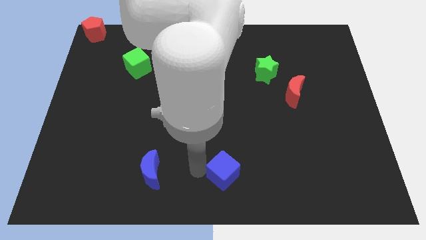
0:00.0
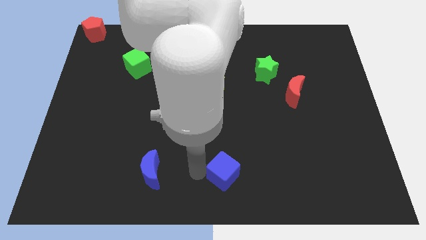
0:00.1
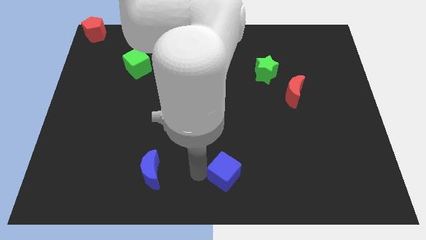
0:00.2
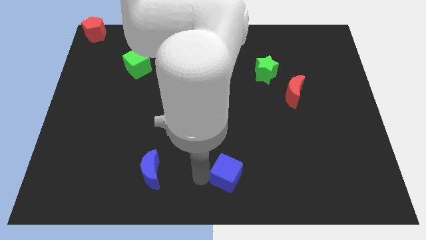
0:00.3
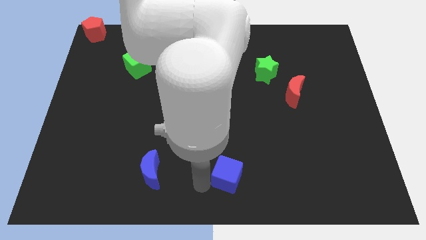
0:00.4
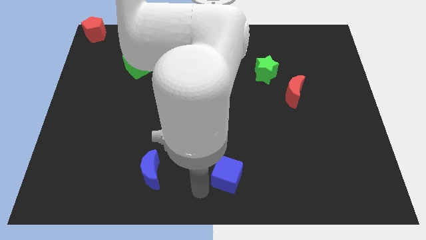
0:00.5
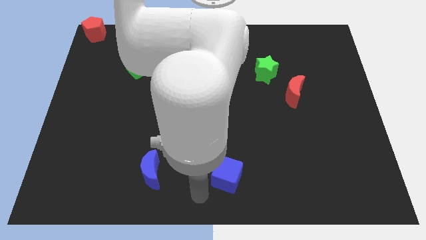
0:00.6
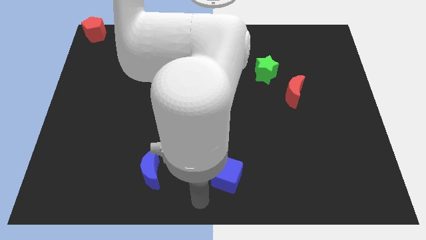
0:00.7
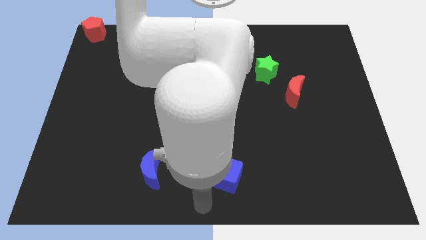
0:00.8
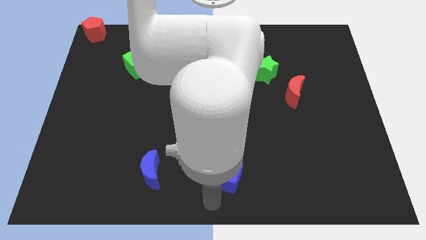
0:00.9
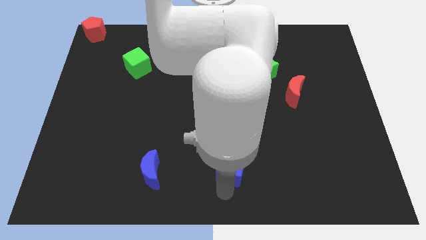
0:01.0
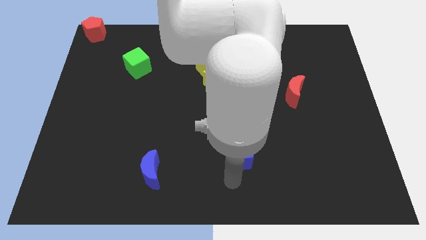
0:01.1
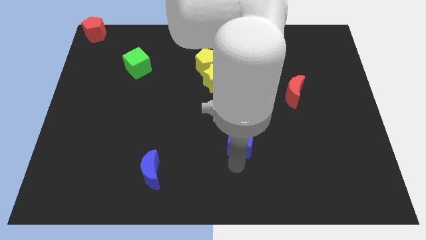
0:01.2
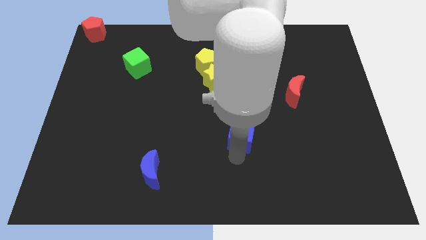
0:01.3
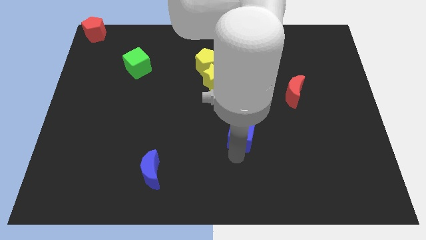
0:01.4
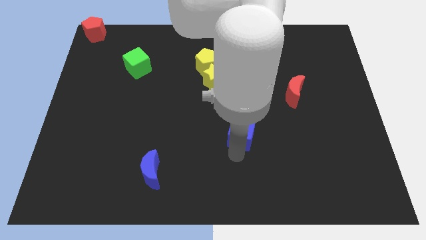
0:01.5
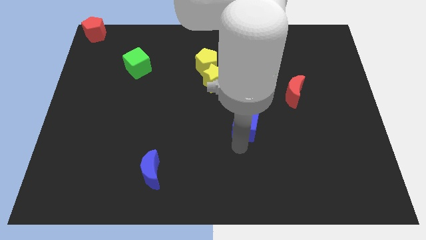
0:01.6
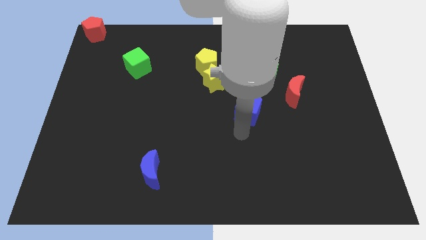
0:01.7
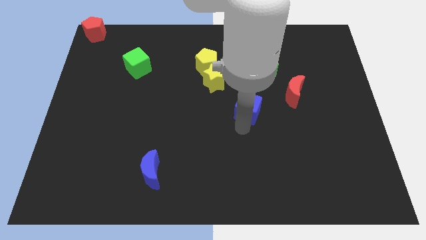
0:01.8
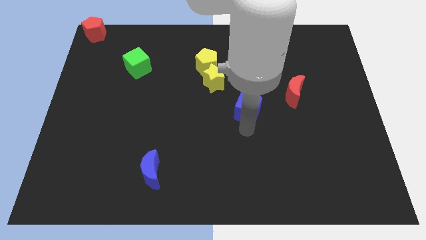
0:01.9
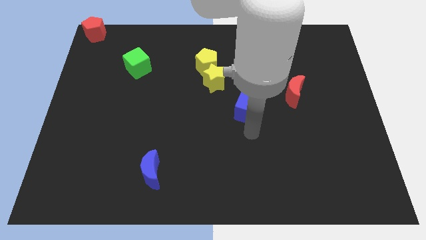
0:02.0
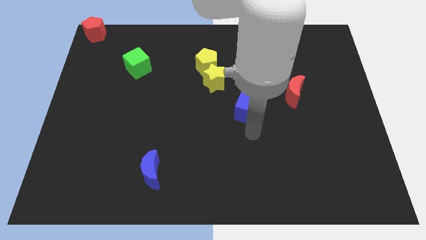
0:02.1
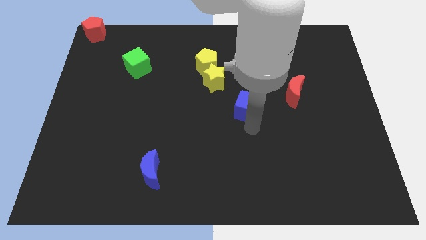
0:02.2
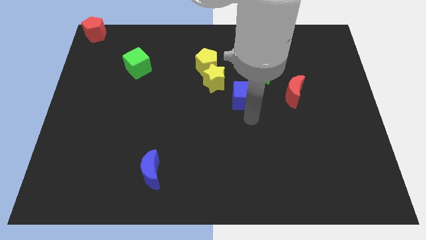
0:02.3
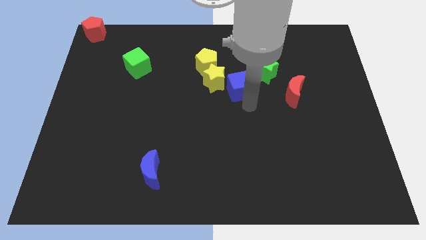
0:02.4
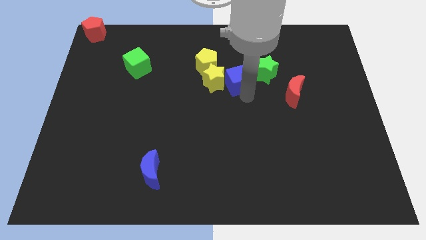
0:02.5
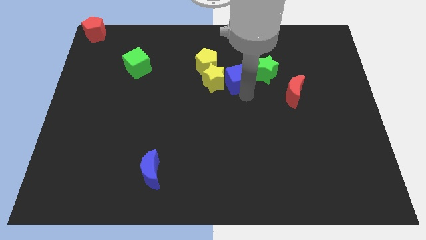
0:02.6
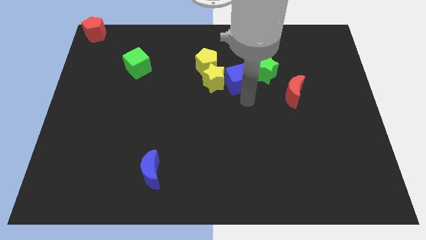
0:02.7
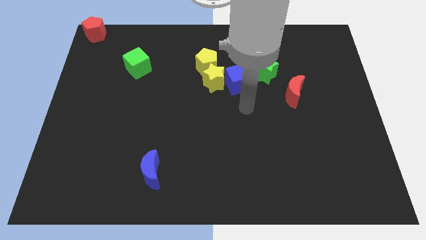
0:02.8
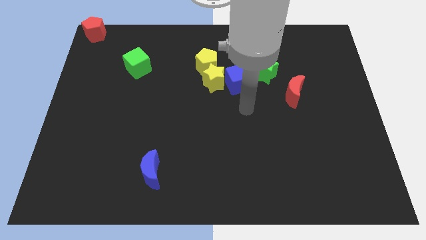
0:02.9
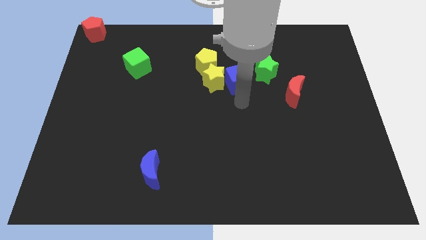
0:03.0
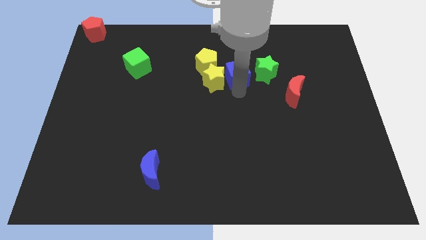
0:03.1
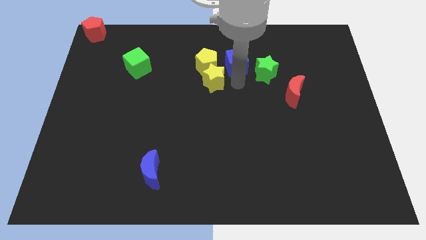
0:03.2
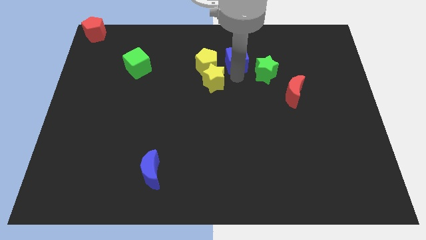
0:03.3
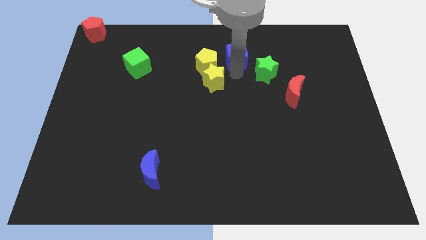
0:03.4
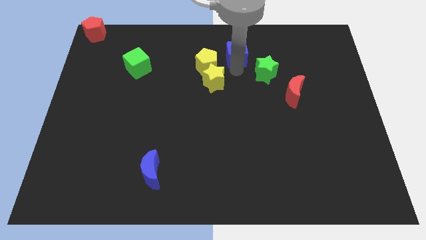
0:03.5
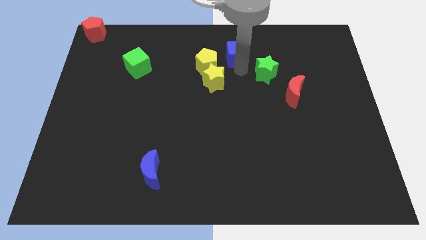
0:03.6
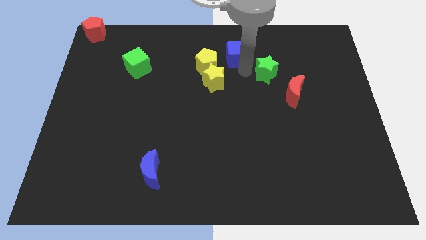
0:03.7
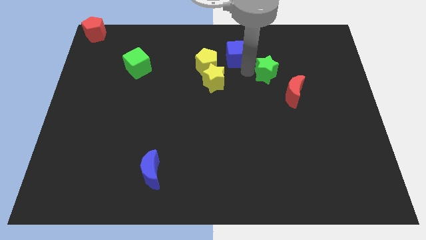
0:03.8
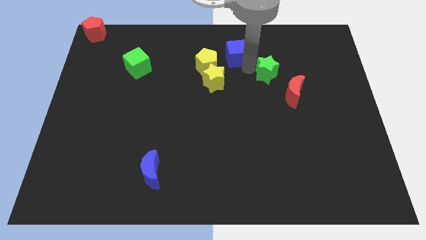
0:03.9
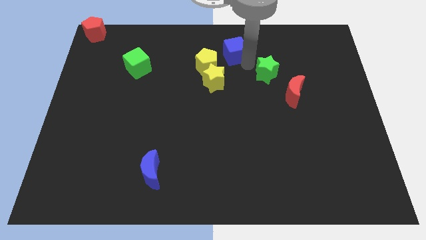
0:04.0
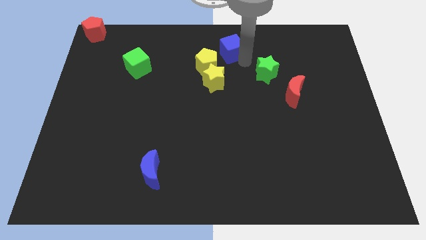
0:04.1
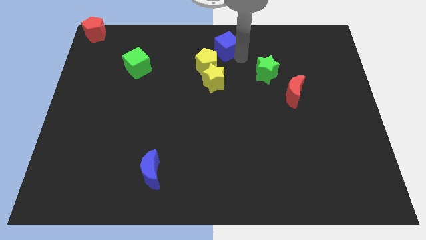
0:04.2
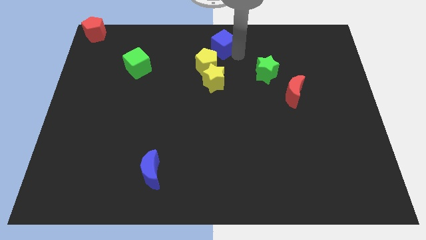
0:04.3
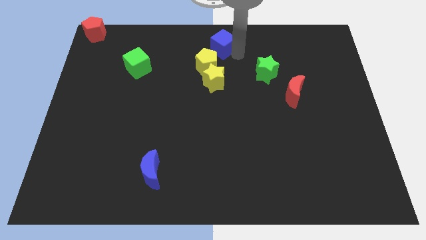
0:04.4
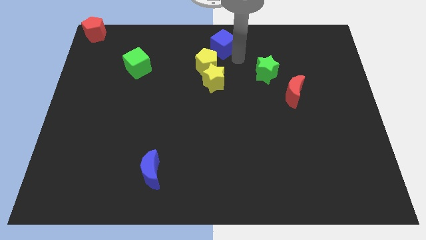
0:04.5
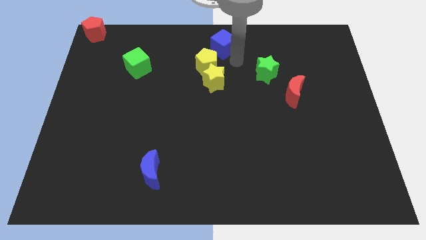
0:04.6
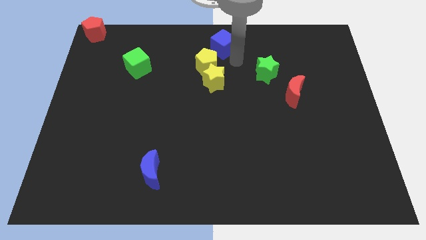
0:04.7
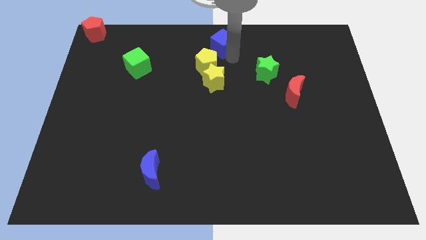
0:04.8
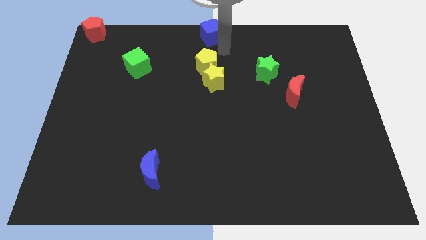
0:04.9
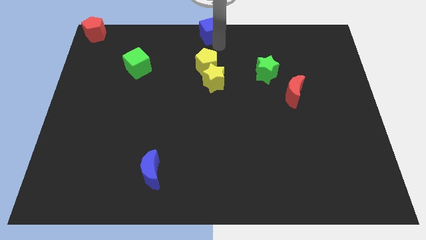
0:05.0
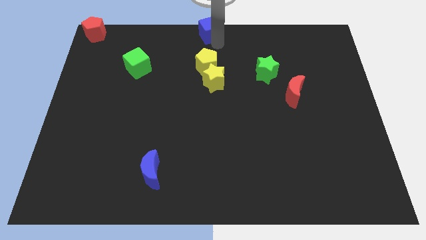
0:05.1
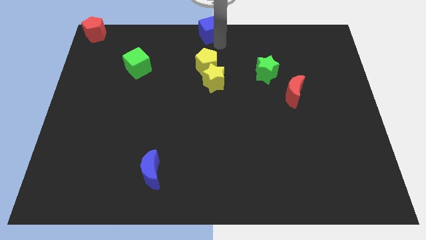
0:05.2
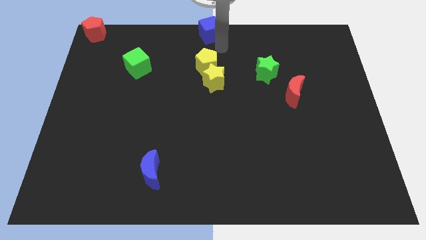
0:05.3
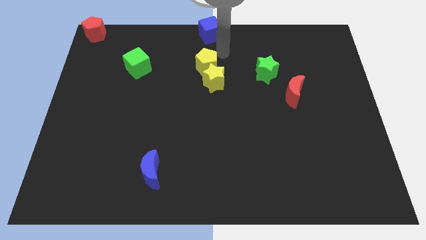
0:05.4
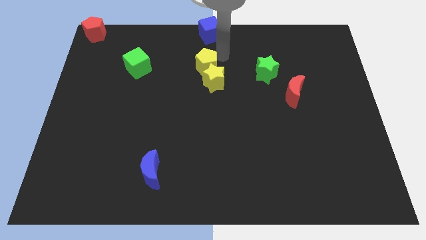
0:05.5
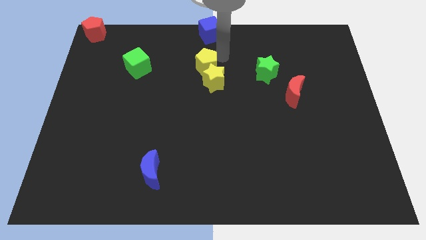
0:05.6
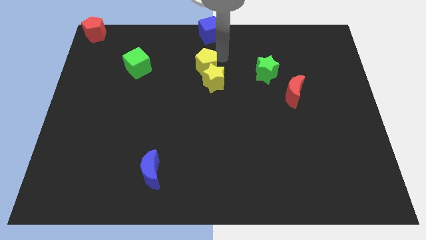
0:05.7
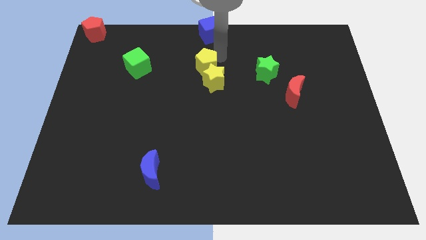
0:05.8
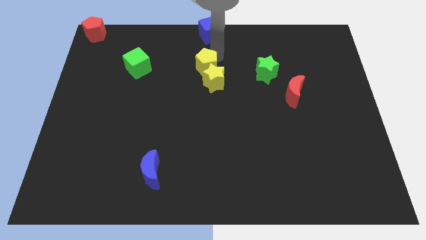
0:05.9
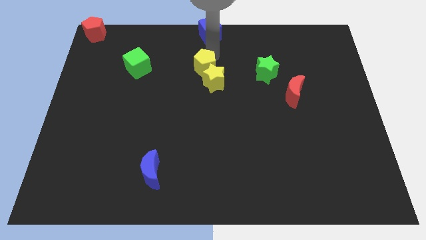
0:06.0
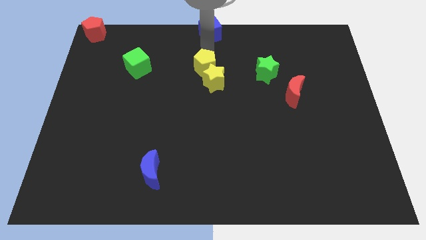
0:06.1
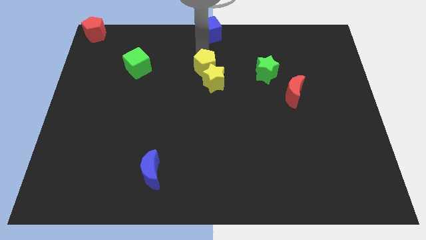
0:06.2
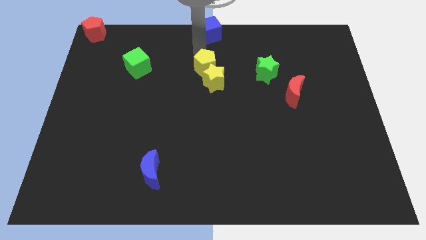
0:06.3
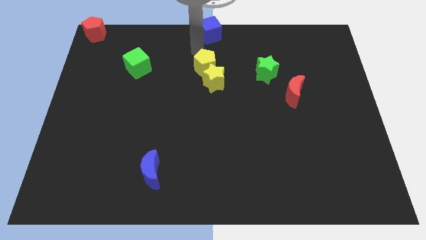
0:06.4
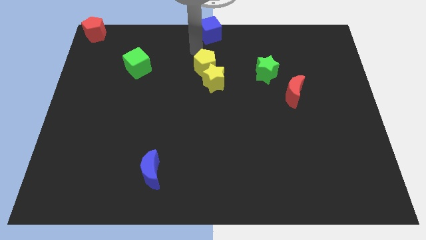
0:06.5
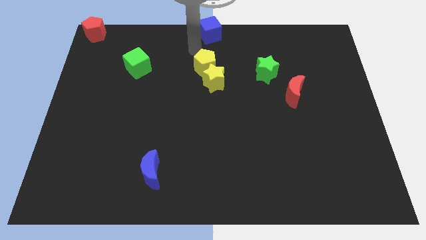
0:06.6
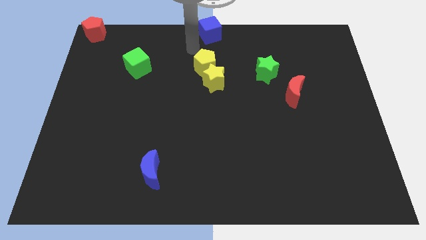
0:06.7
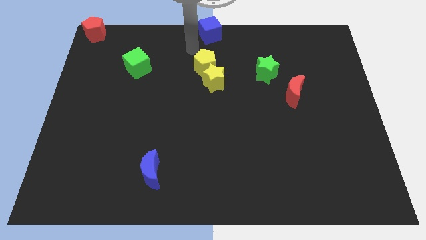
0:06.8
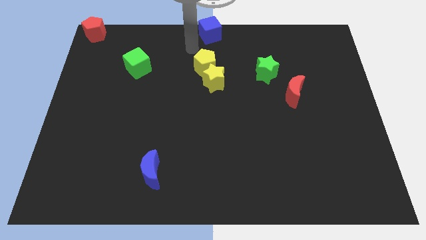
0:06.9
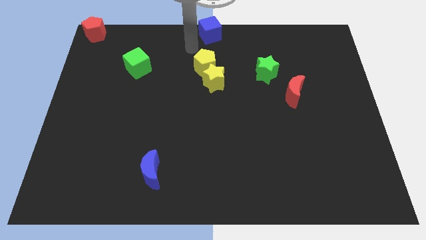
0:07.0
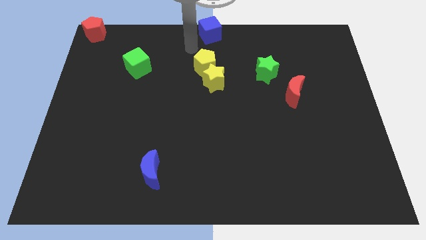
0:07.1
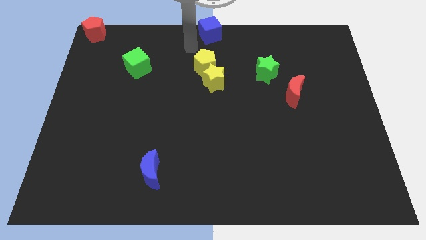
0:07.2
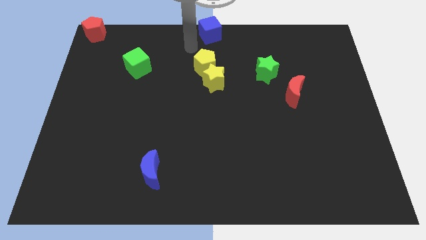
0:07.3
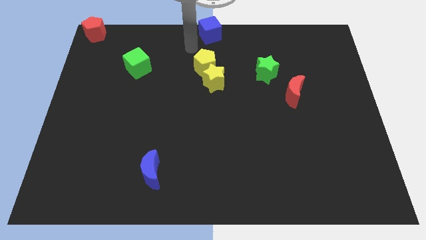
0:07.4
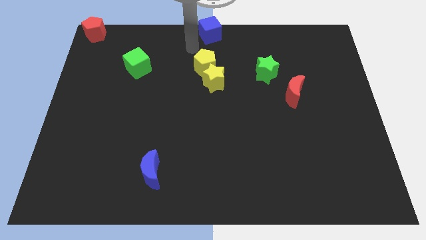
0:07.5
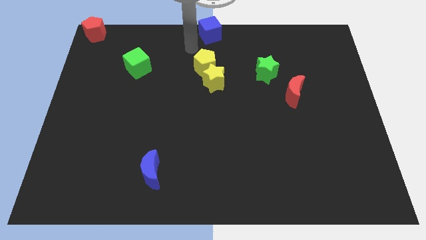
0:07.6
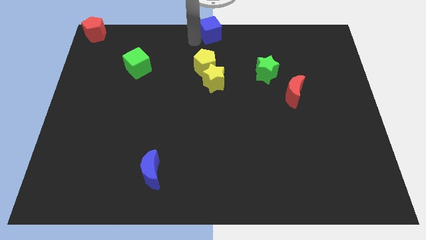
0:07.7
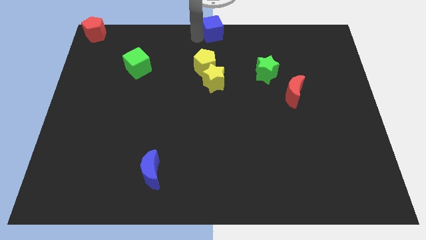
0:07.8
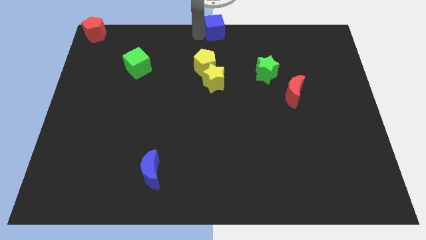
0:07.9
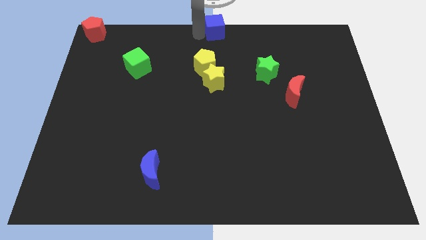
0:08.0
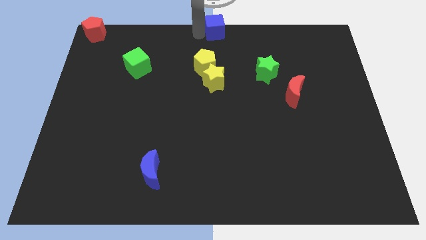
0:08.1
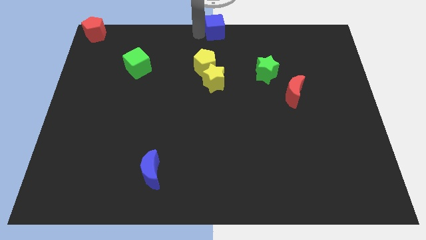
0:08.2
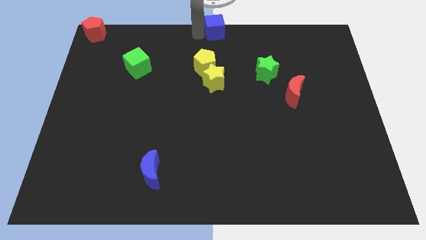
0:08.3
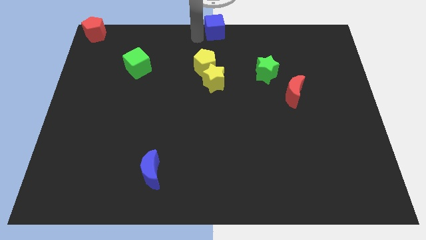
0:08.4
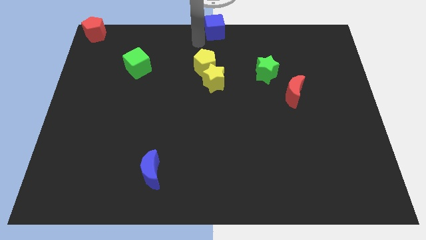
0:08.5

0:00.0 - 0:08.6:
push the blue cube to the top center of the board

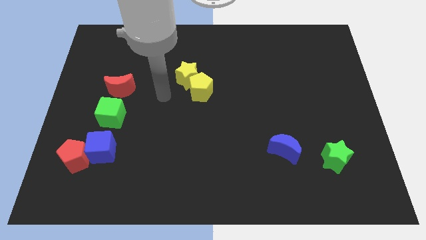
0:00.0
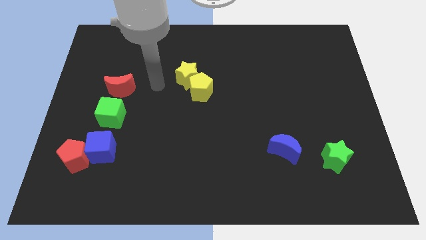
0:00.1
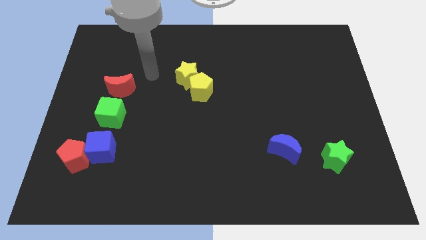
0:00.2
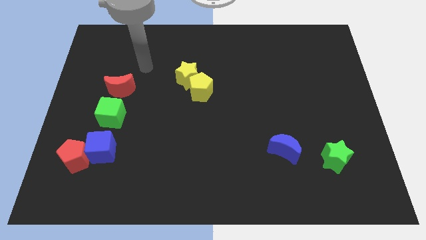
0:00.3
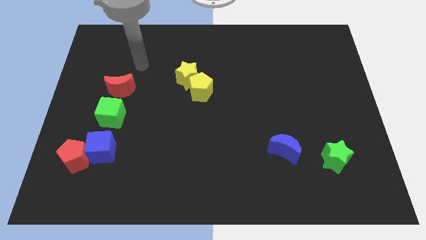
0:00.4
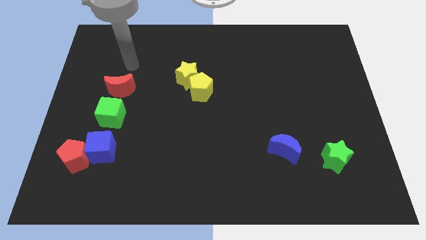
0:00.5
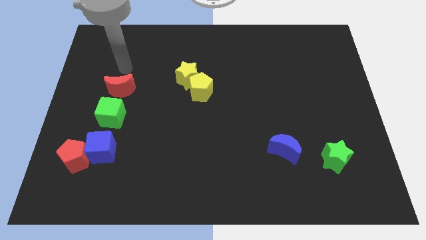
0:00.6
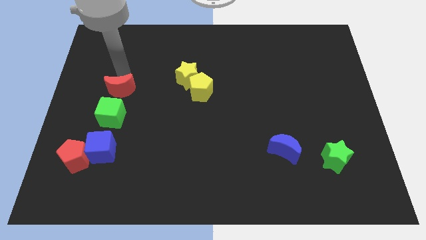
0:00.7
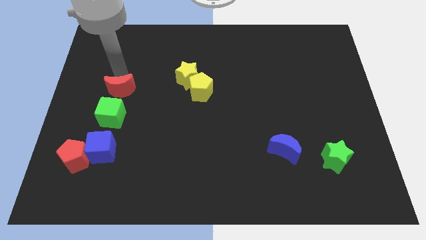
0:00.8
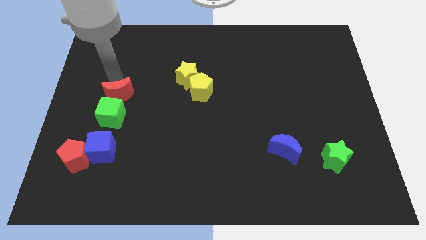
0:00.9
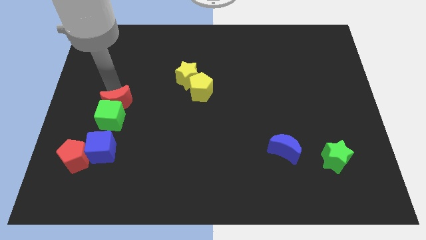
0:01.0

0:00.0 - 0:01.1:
place red moon on top of green cube
